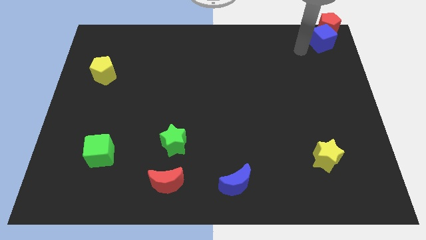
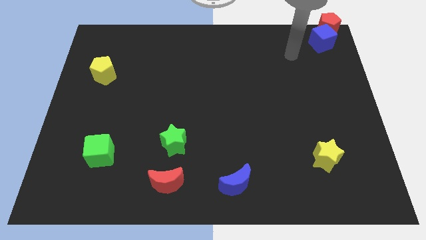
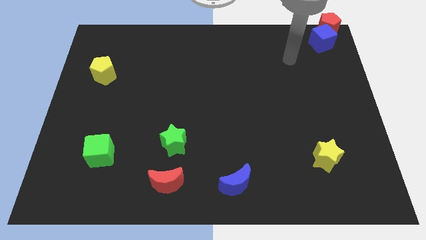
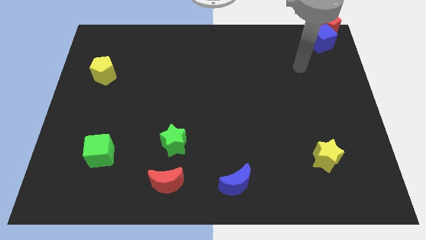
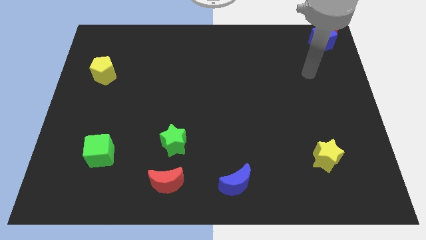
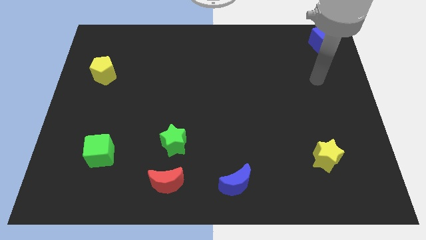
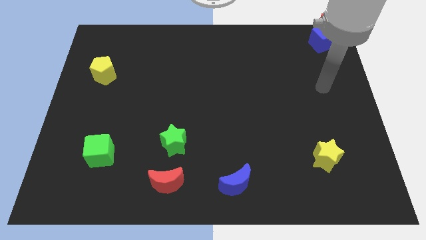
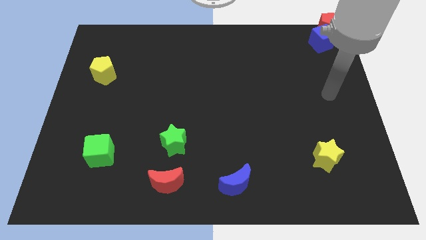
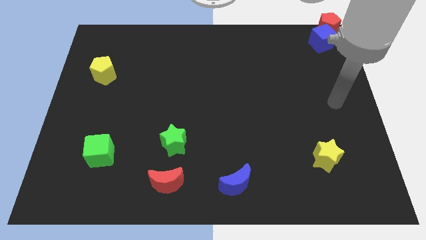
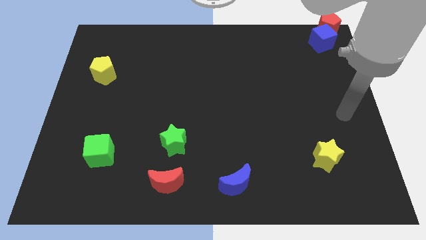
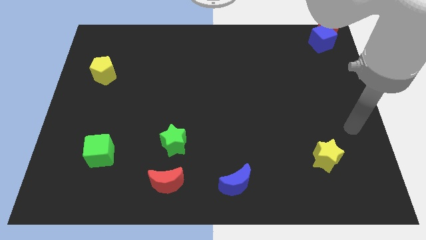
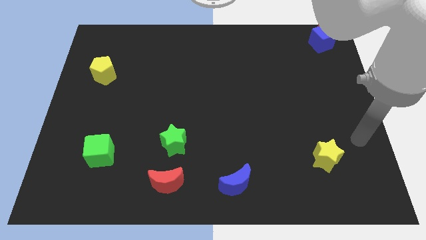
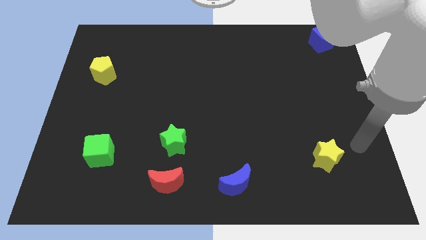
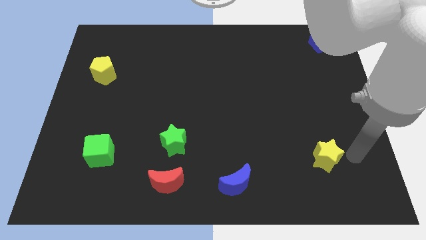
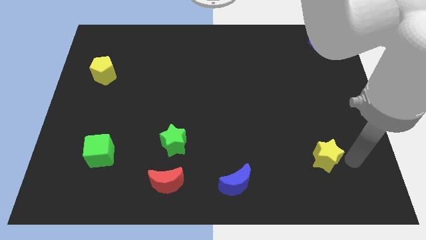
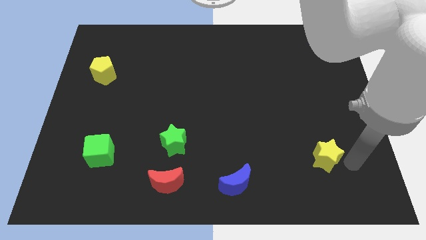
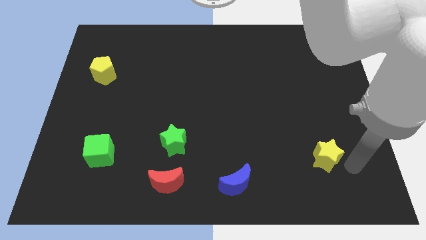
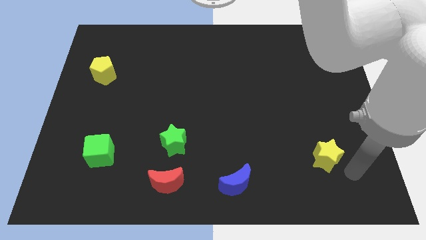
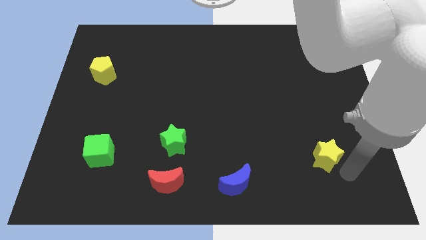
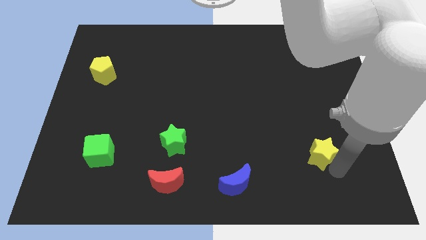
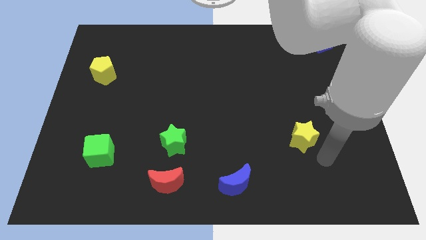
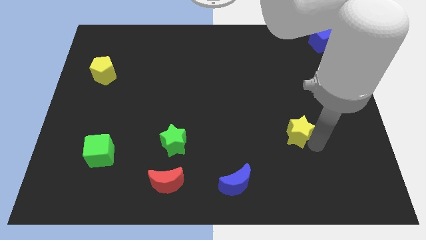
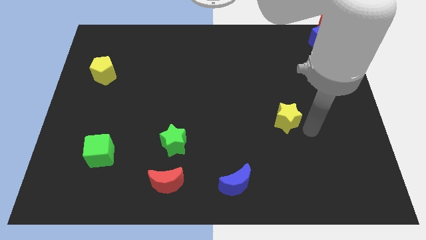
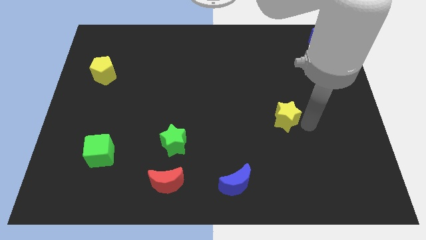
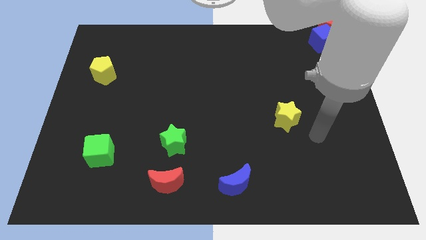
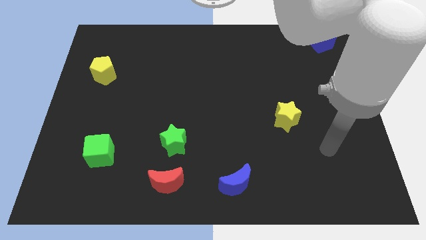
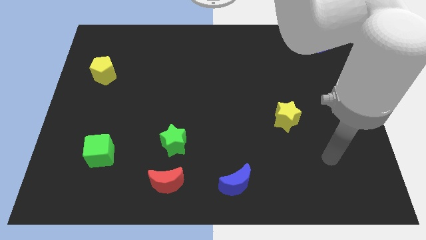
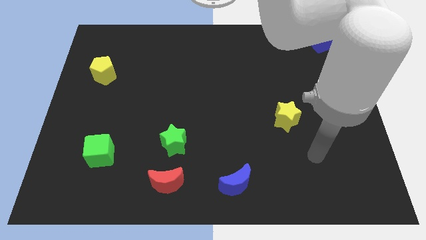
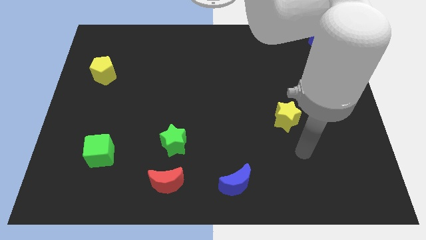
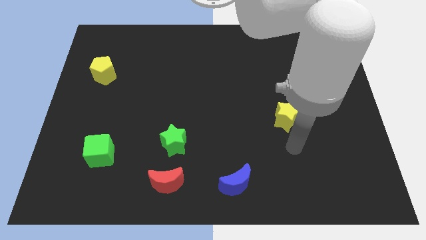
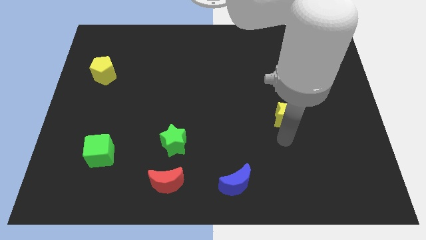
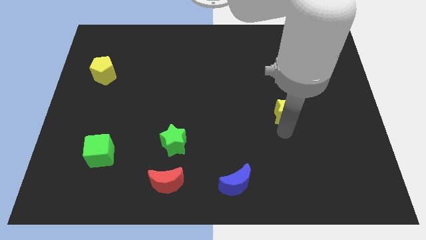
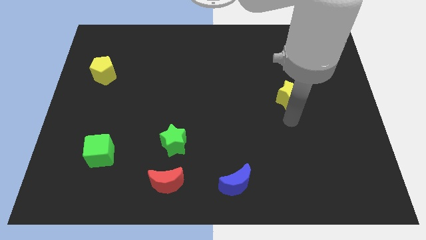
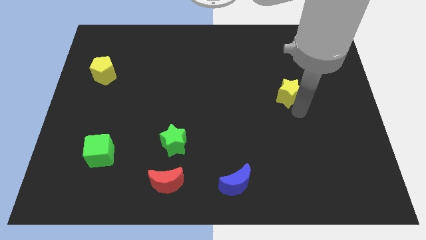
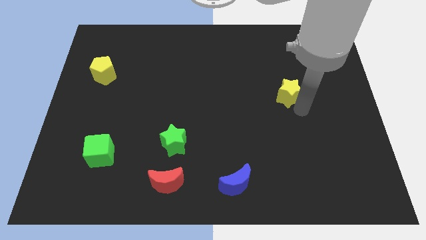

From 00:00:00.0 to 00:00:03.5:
drag the yellow star diagonally top right to the green star

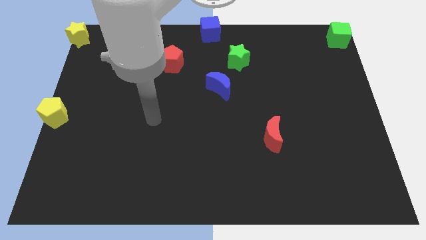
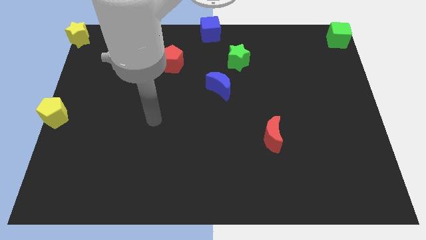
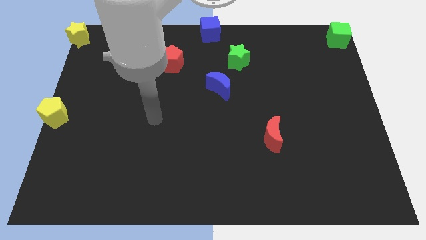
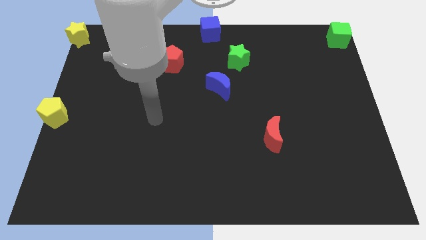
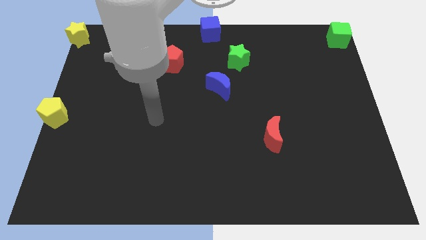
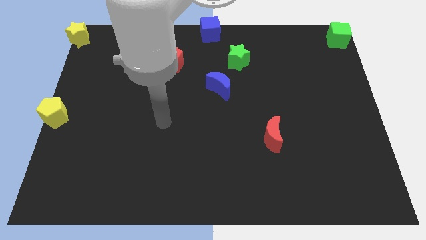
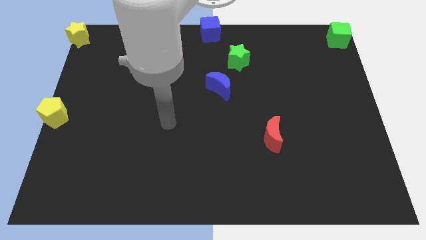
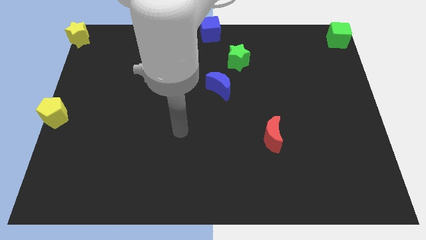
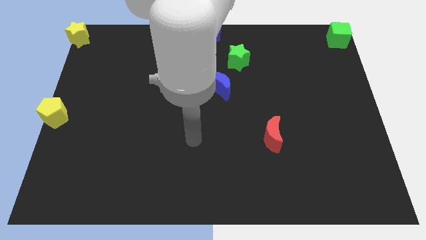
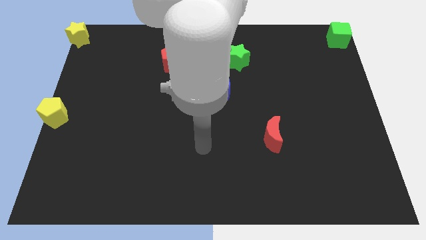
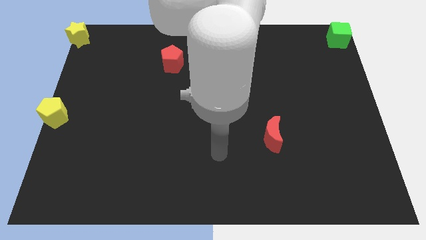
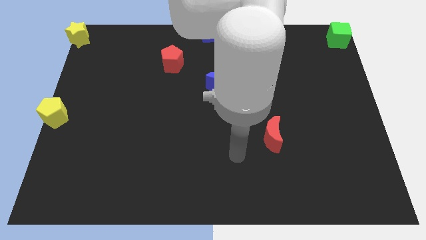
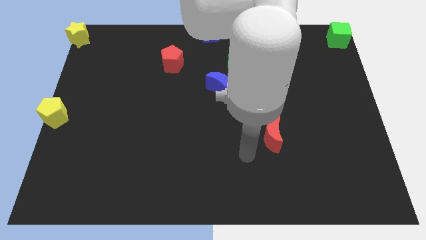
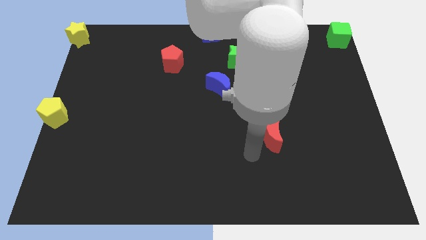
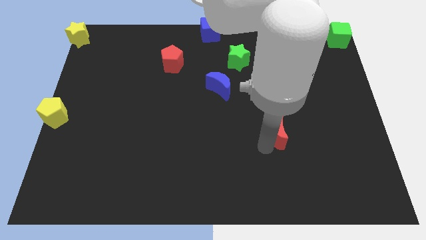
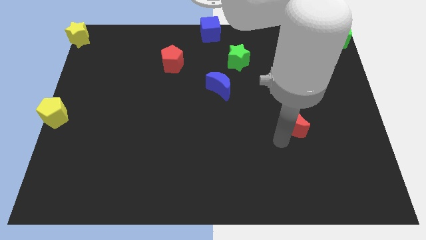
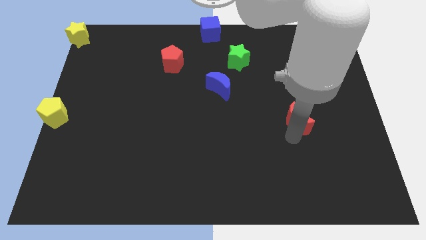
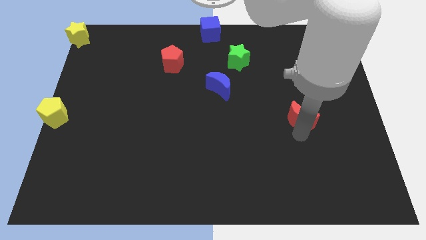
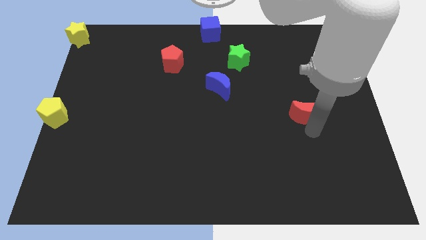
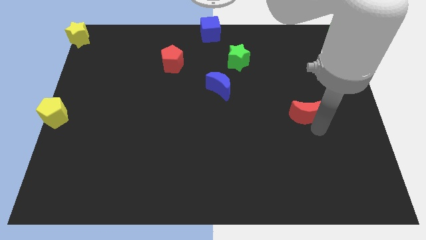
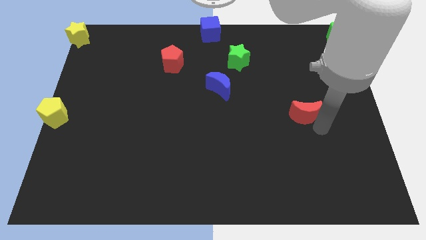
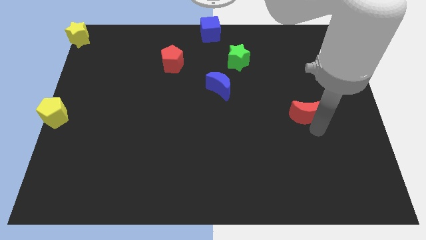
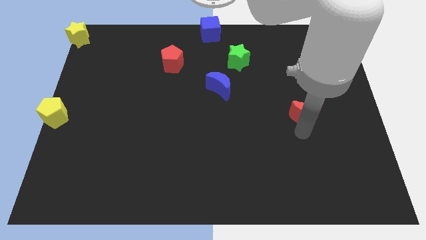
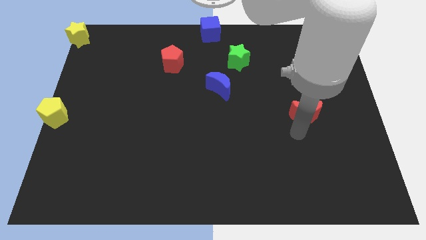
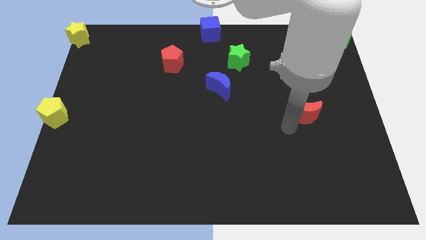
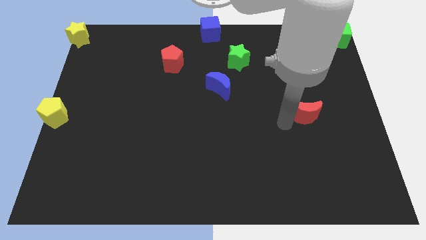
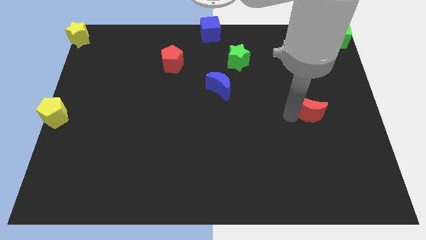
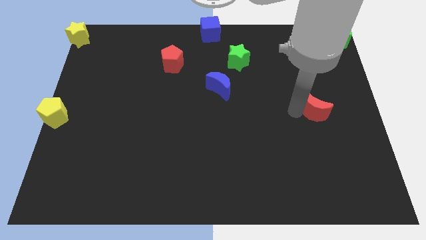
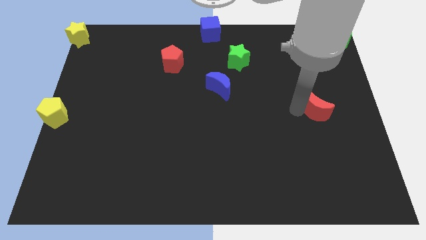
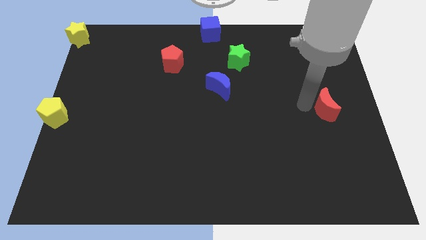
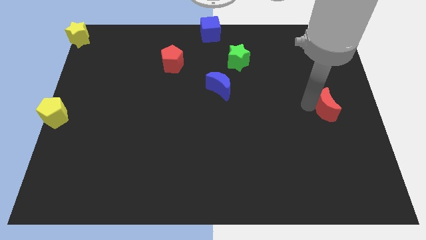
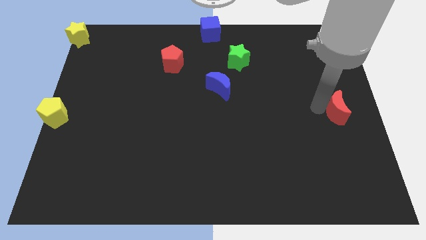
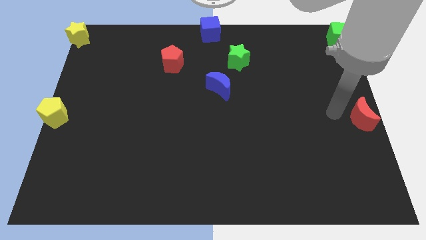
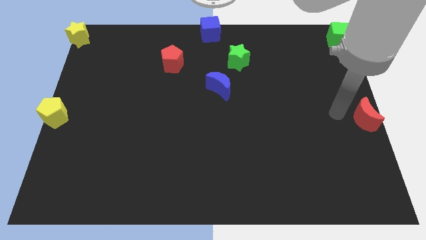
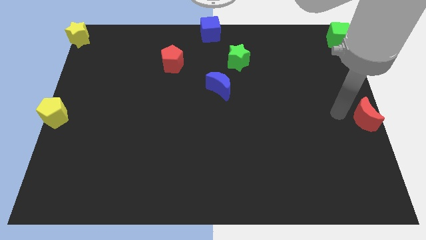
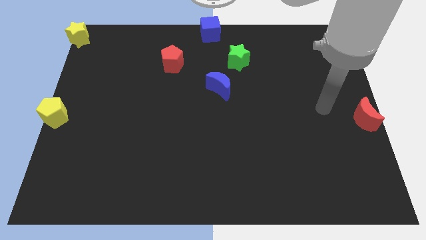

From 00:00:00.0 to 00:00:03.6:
place the red moon to the center right side

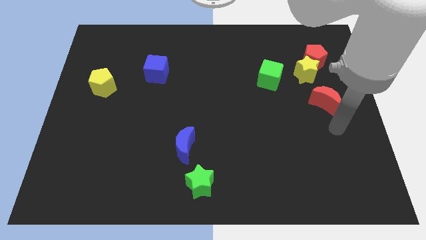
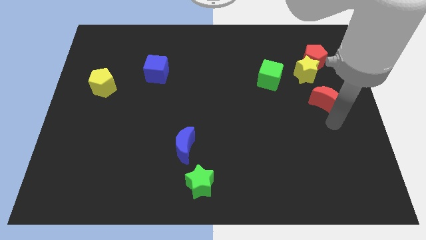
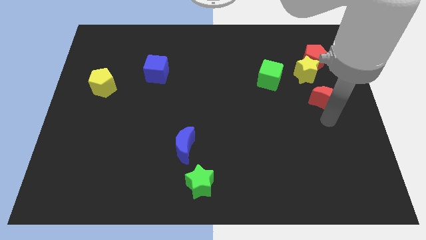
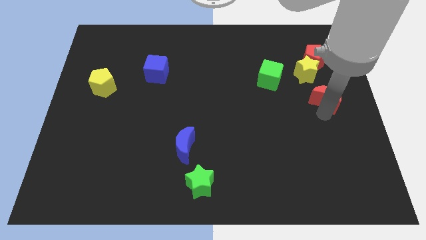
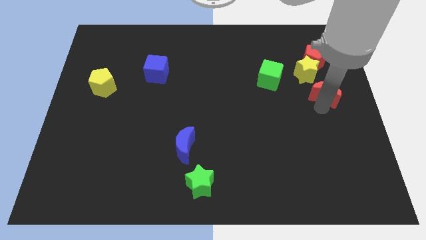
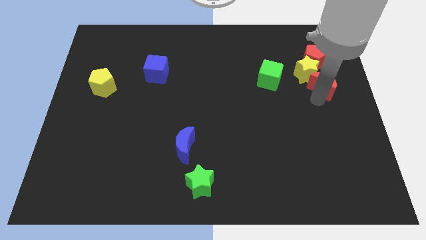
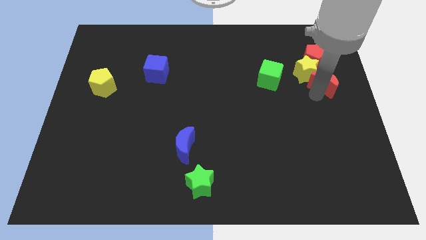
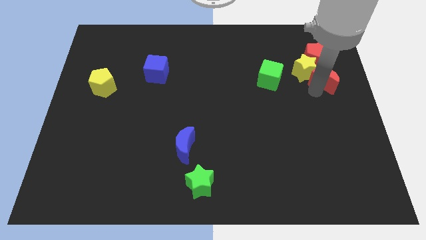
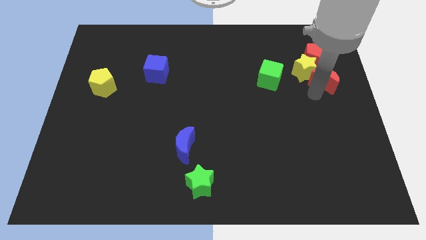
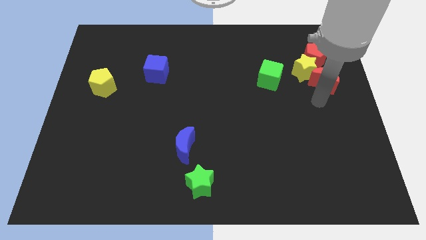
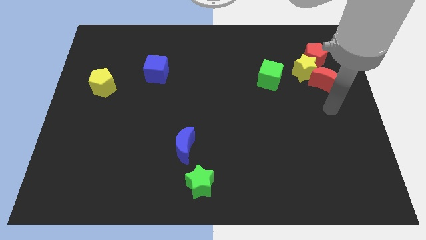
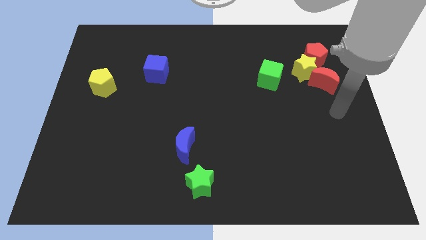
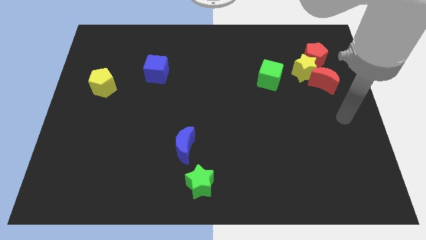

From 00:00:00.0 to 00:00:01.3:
push the red moon into the yellow star

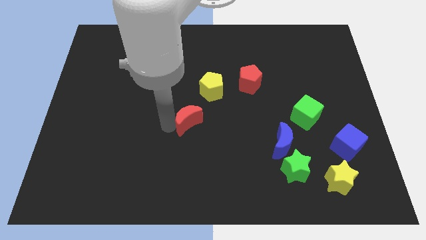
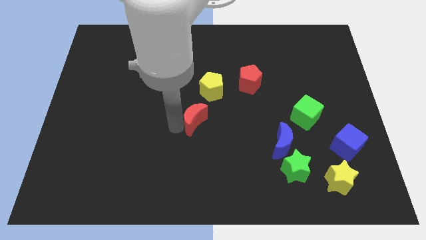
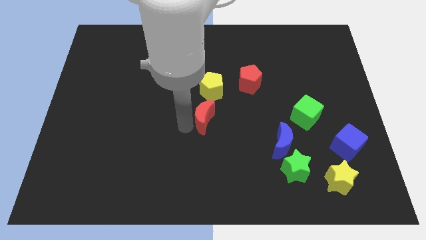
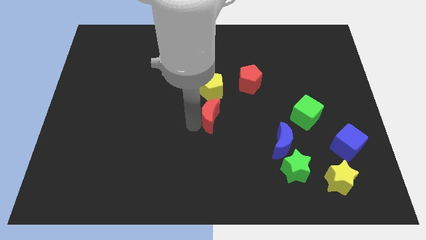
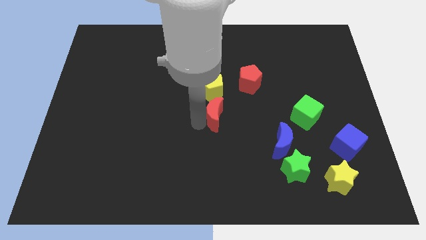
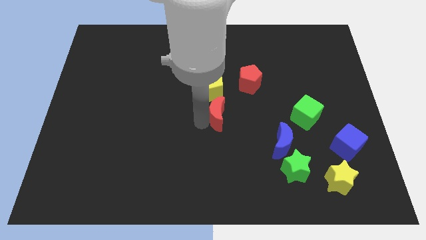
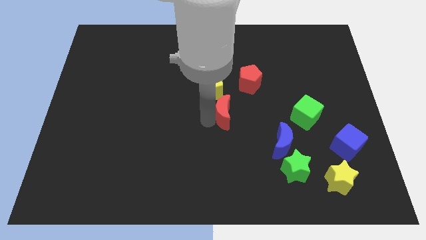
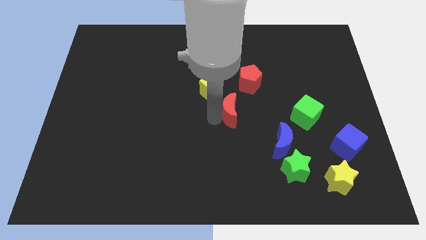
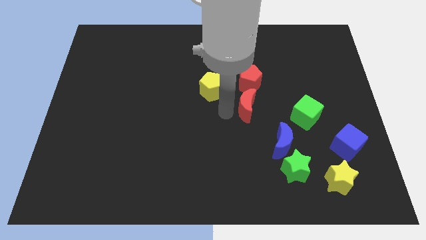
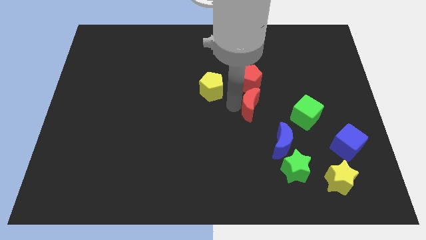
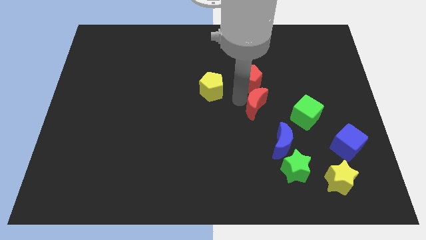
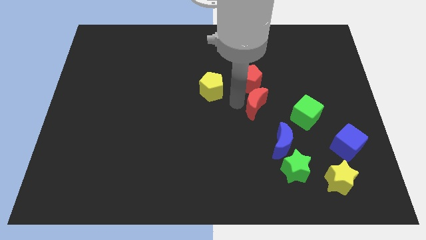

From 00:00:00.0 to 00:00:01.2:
move the red crescent below the red pentagon
